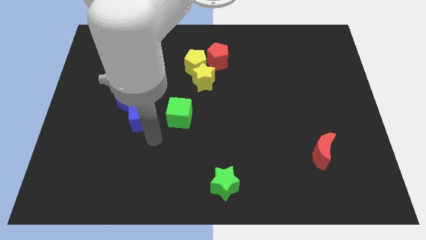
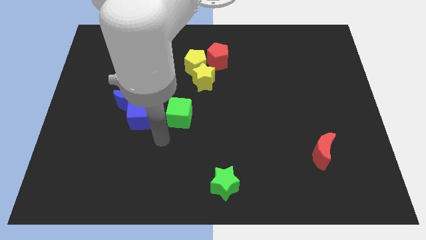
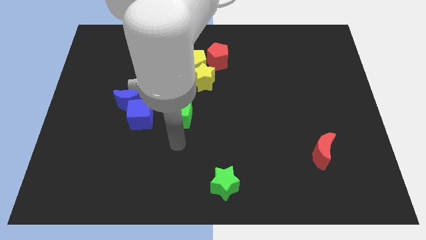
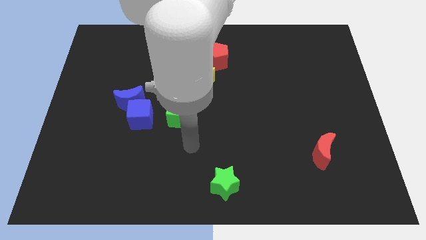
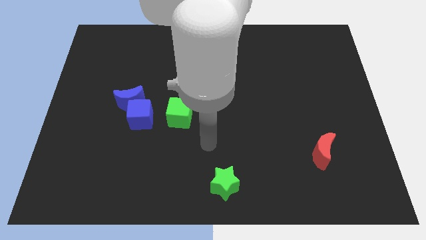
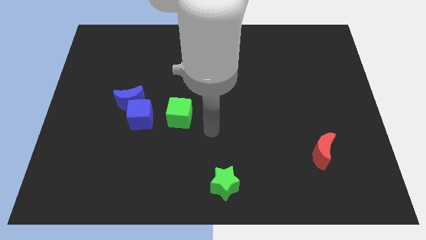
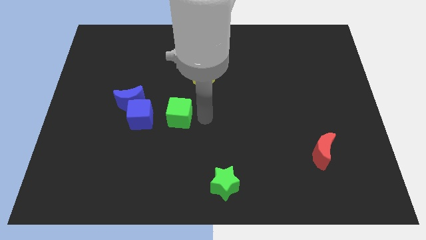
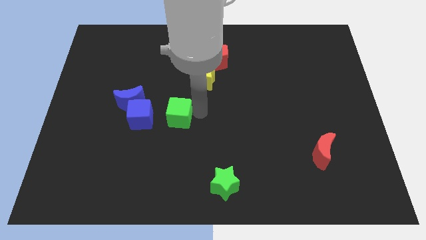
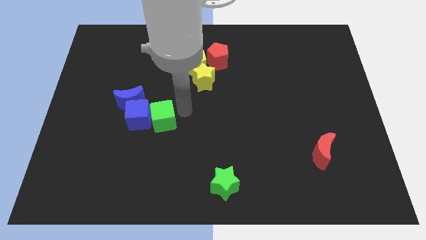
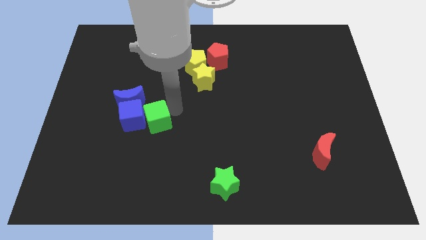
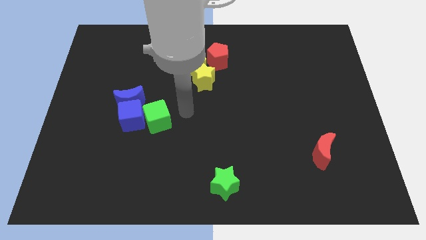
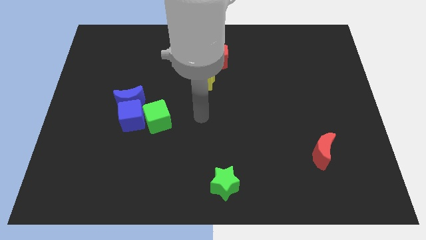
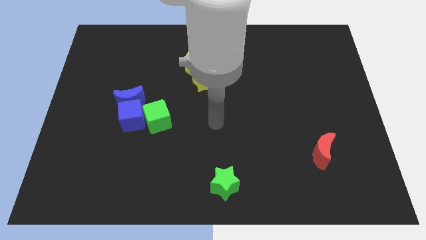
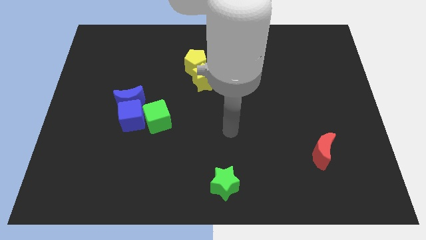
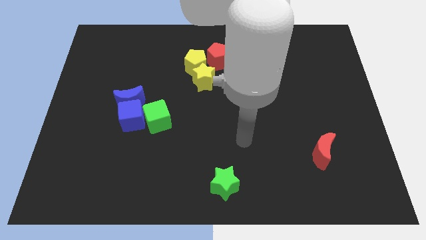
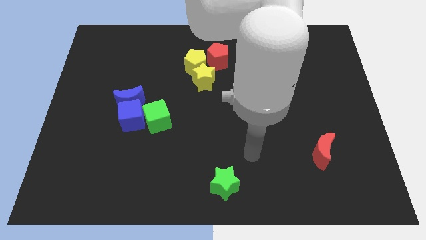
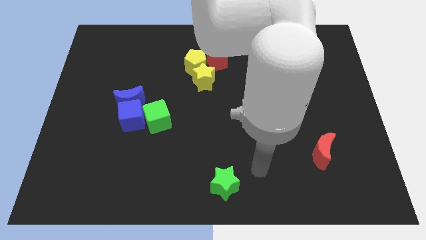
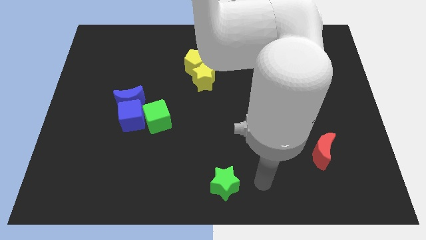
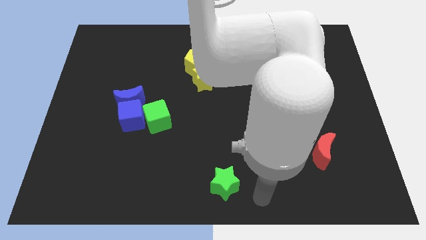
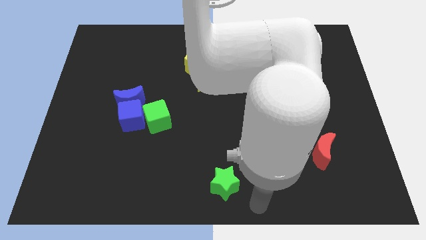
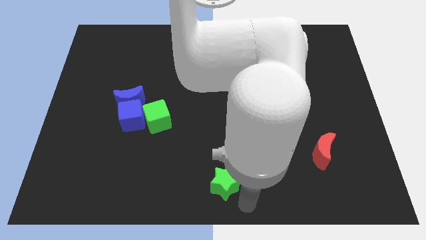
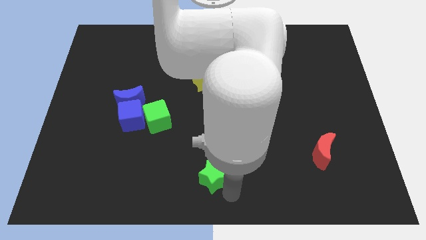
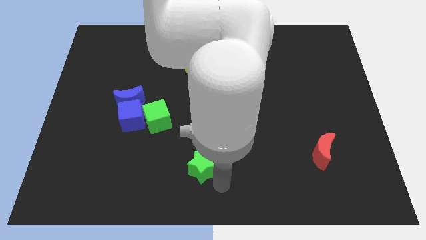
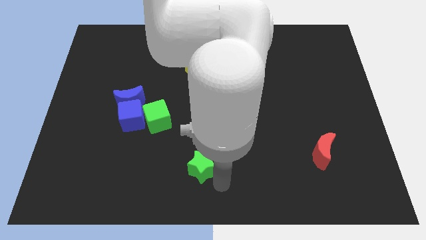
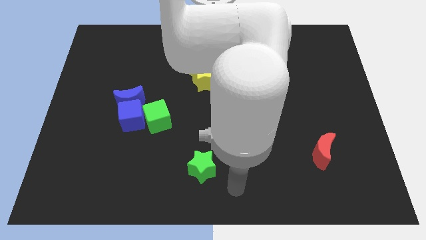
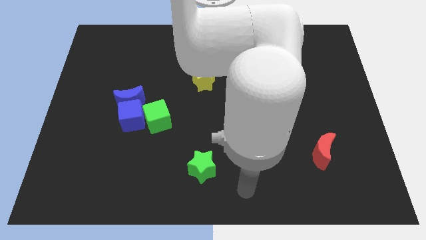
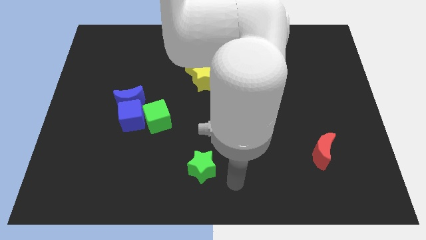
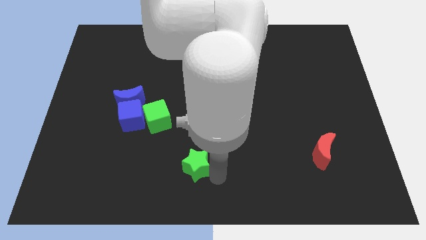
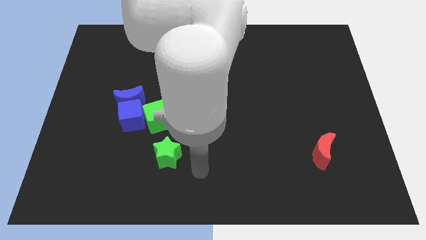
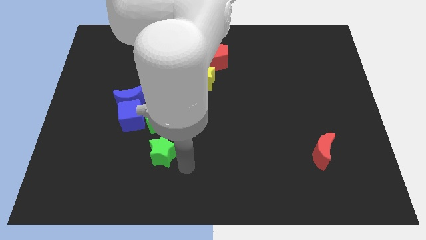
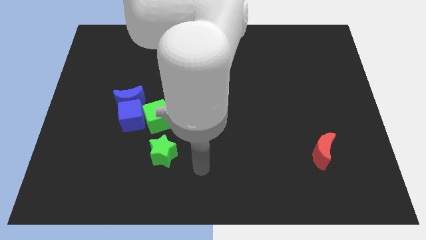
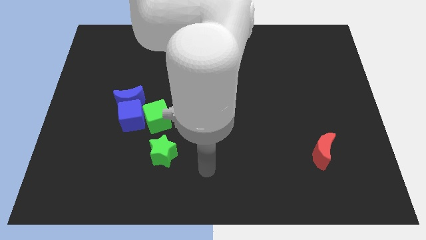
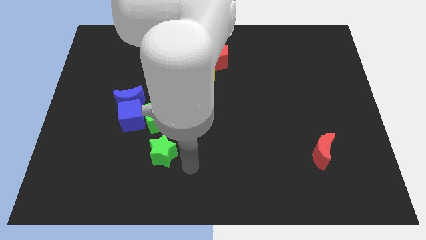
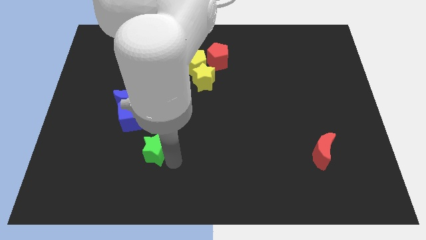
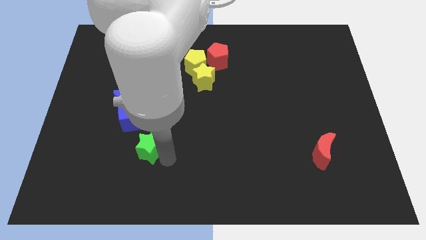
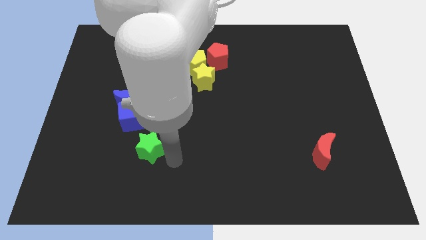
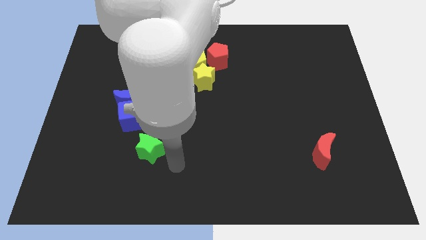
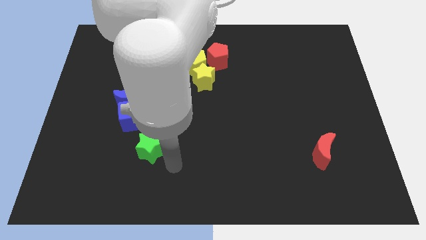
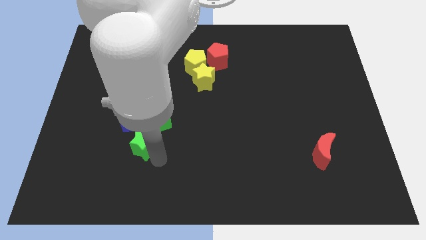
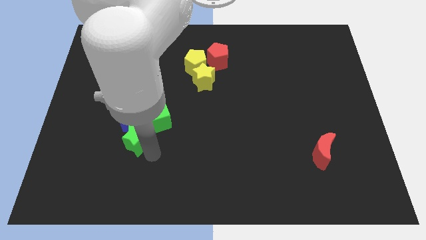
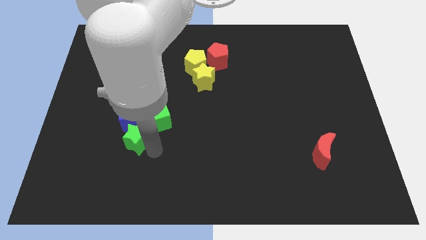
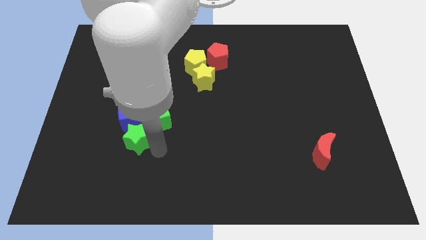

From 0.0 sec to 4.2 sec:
move the green star left below the green cube

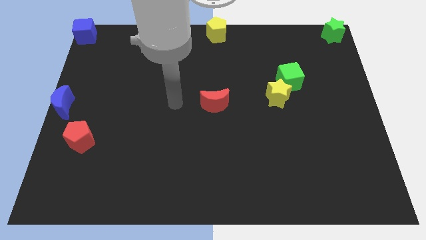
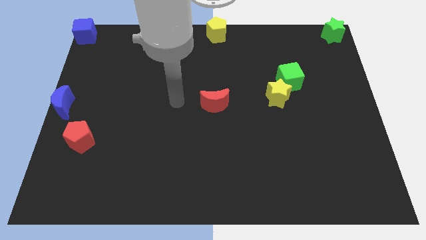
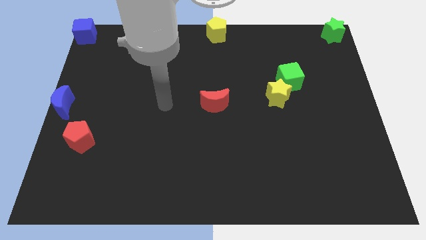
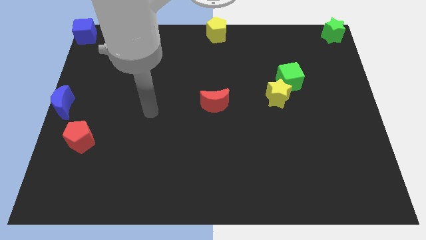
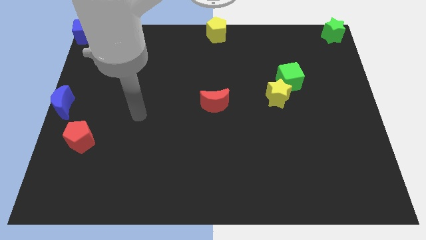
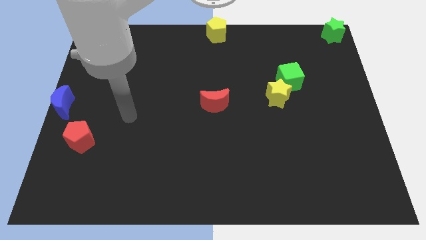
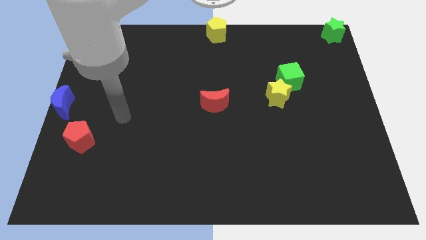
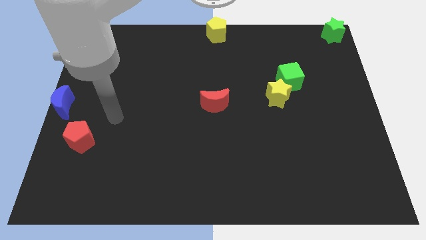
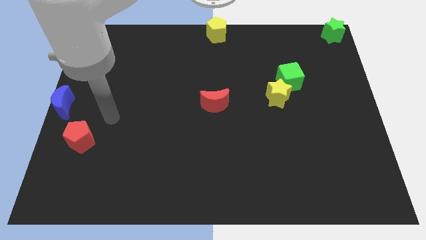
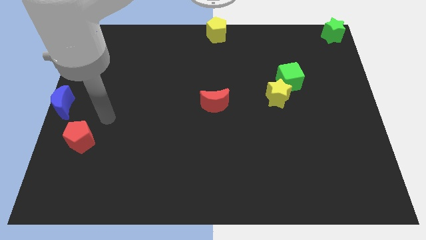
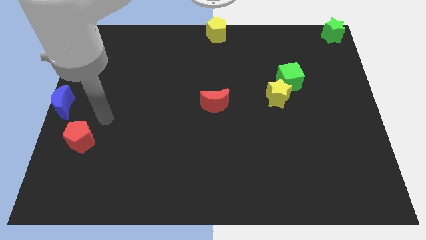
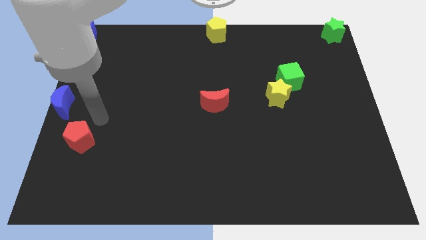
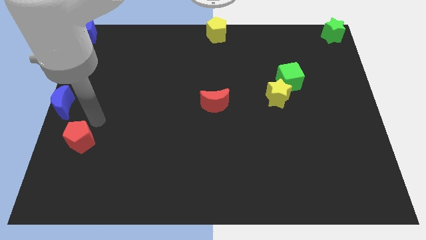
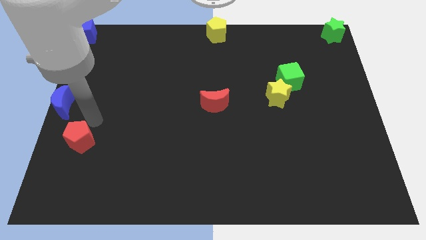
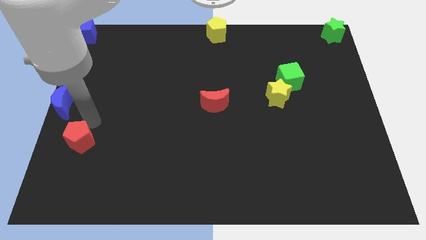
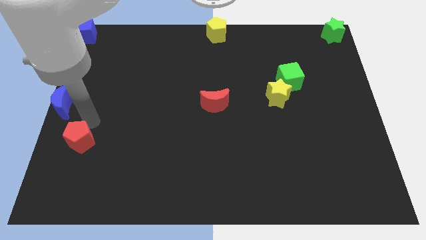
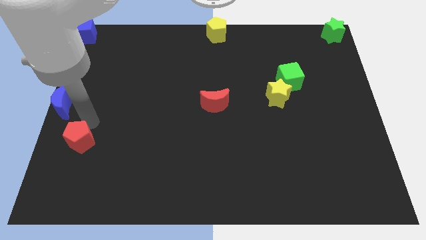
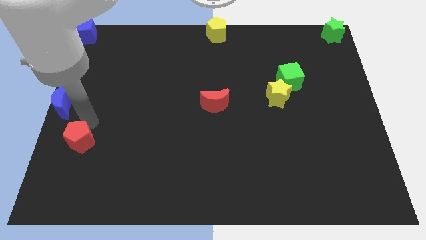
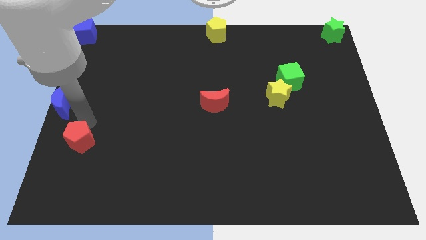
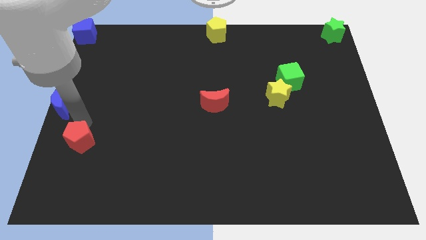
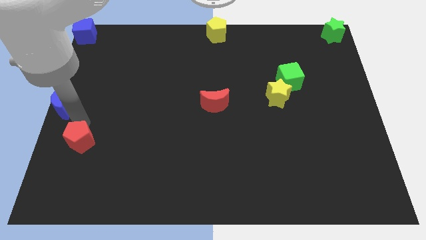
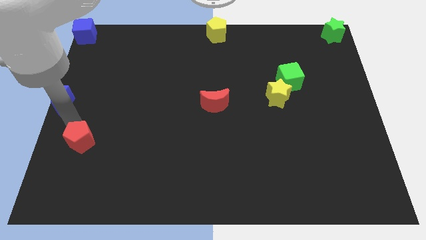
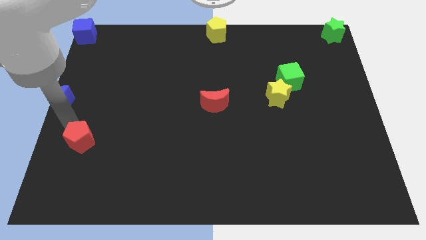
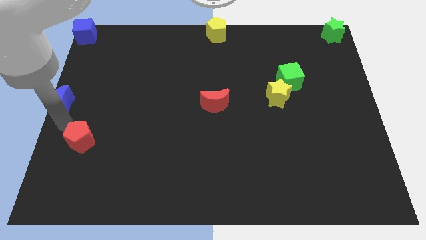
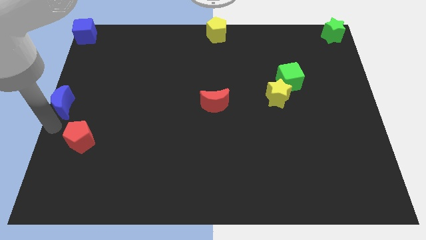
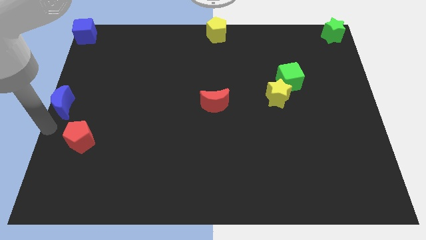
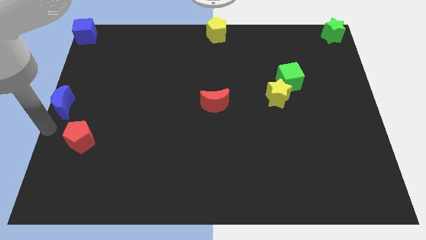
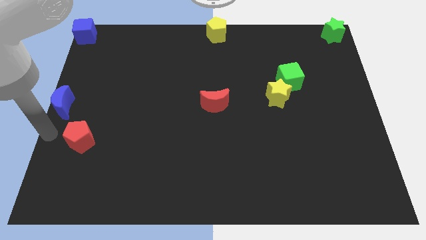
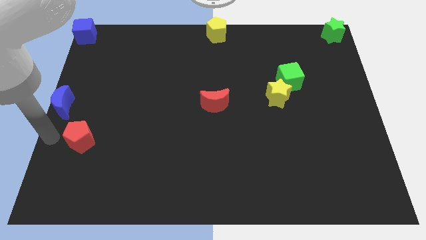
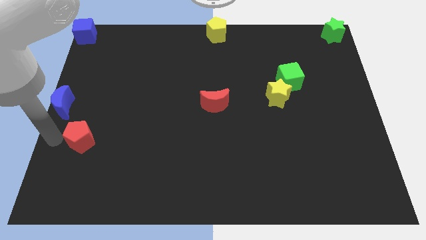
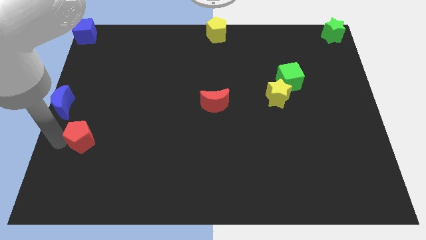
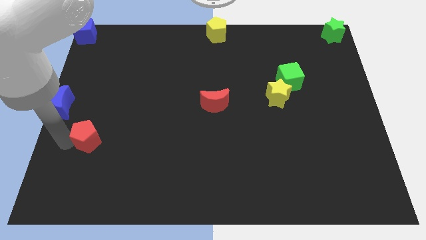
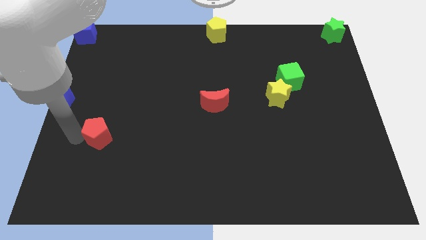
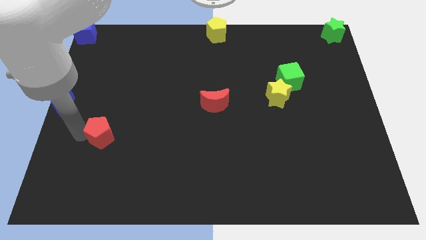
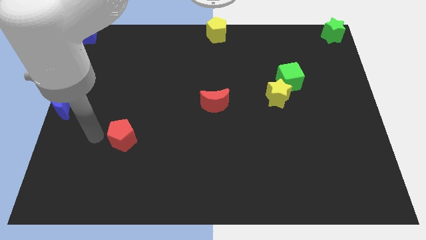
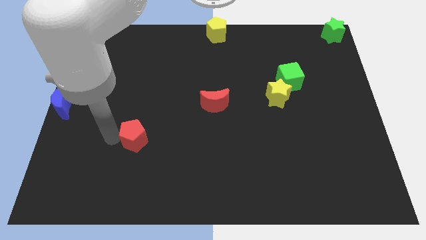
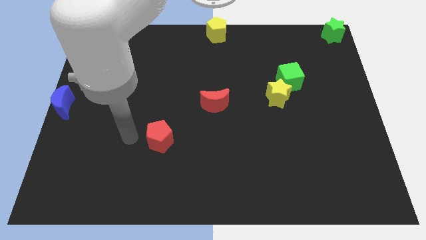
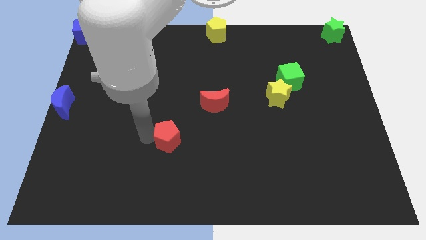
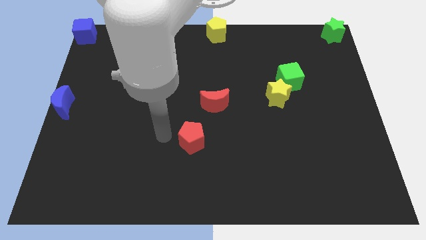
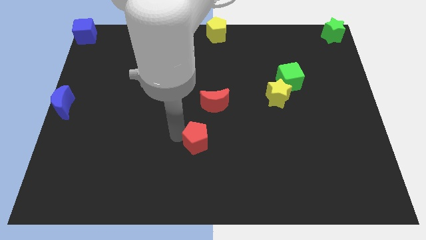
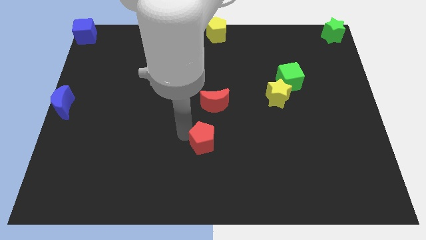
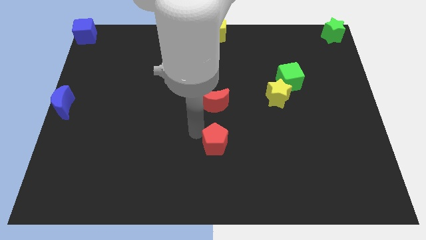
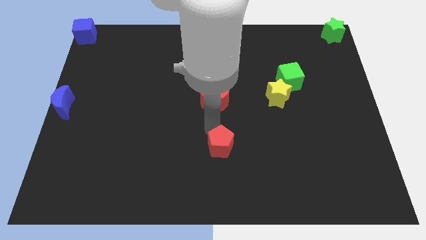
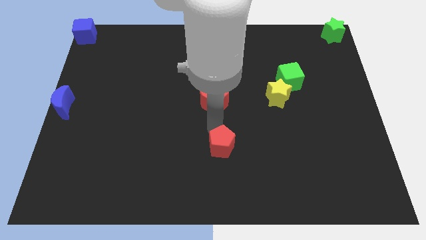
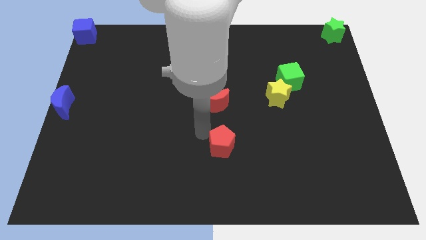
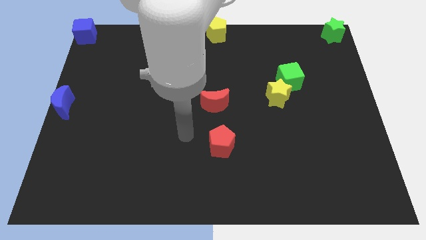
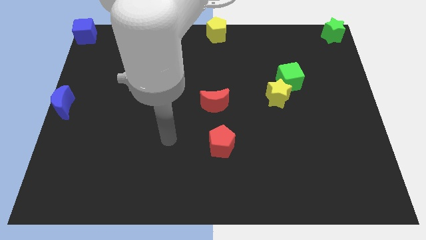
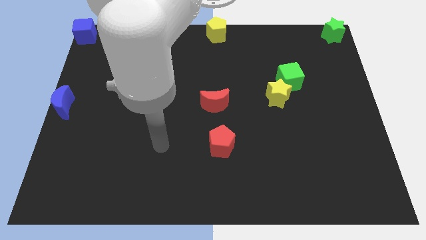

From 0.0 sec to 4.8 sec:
put the red pentagon vertically below the red crescent
